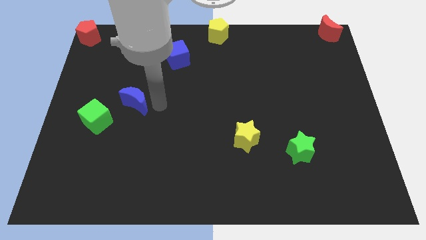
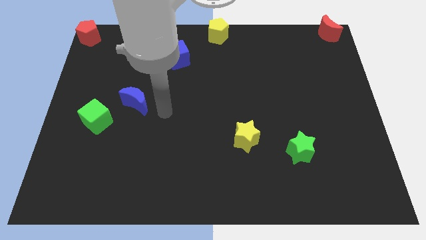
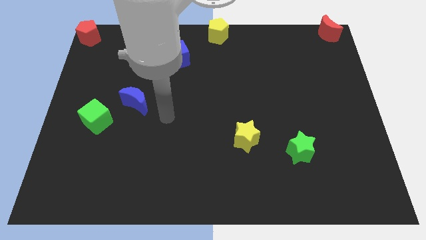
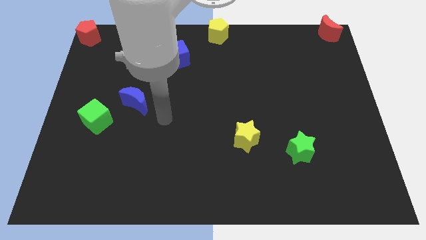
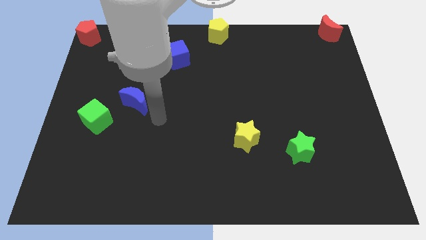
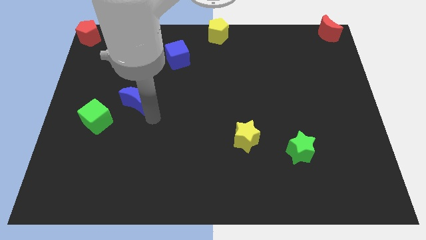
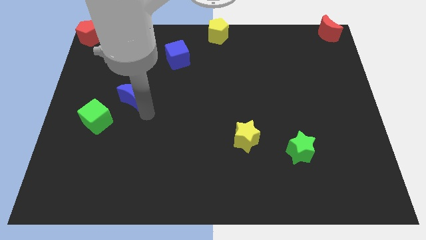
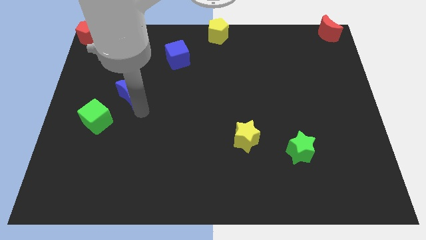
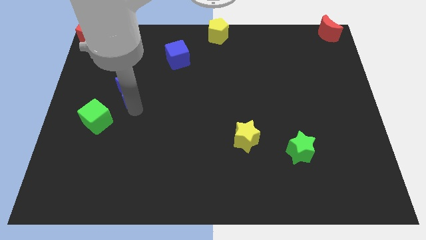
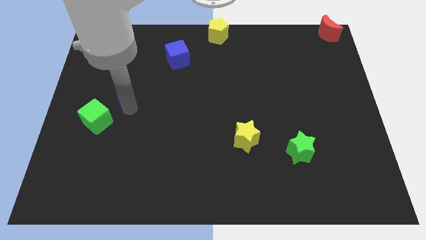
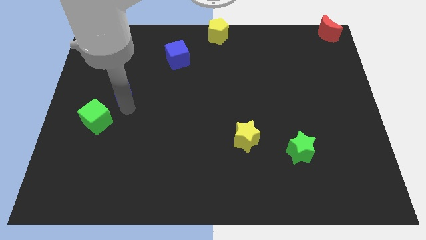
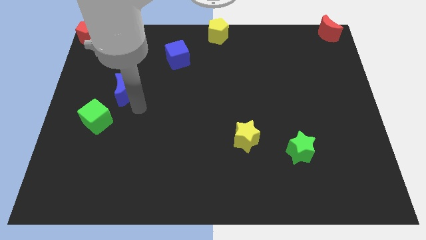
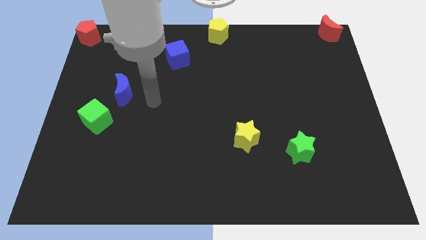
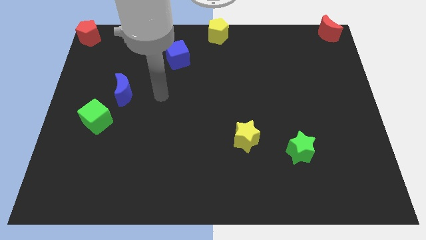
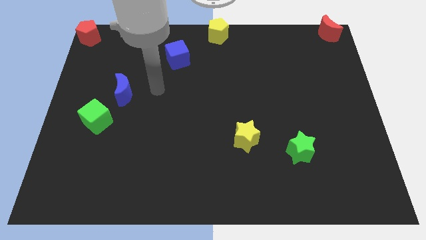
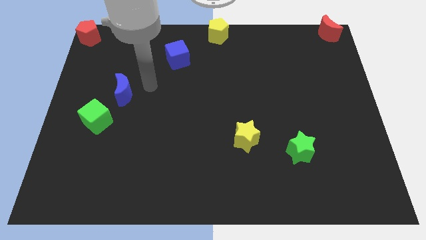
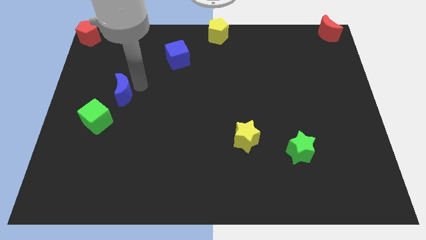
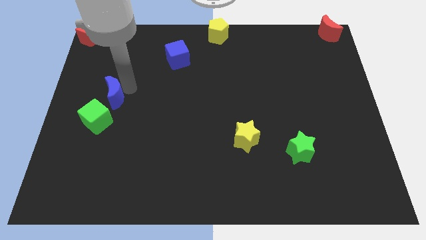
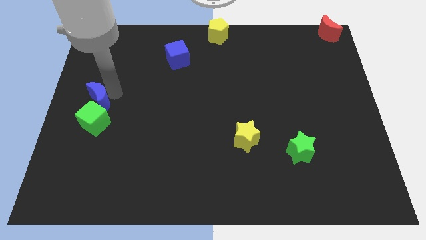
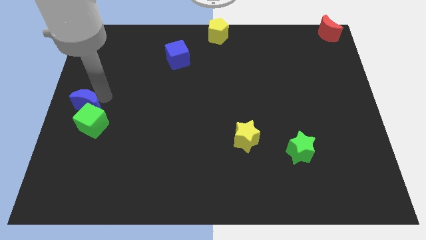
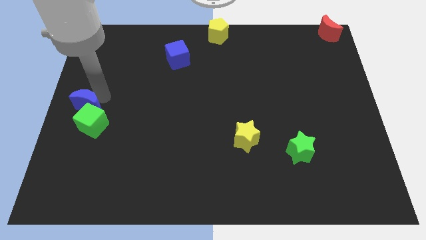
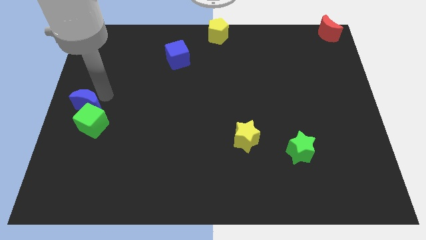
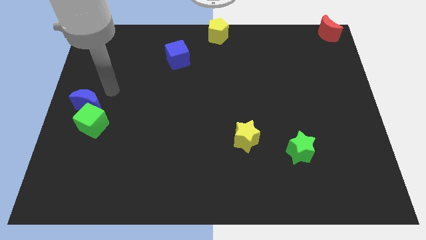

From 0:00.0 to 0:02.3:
move the blue crescent into the green cube at the left bottom of board

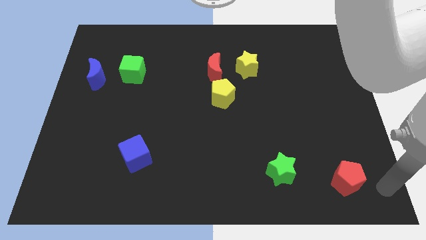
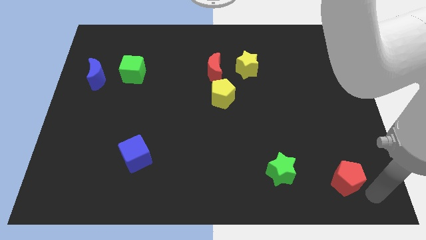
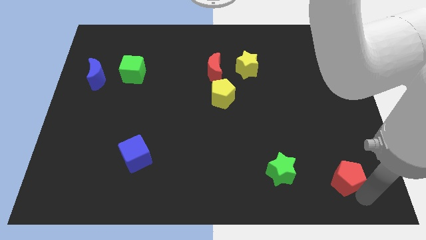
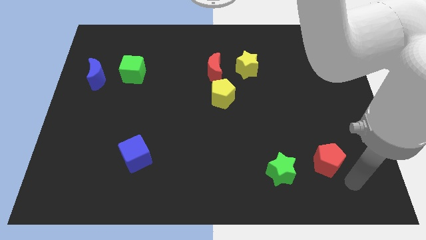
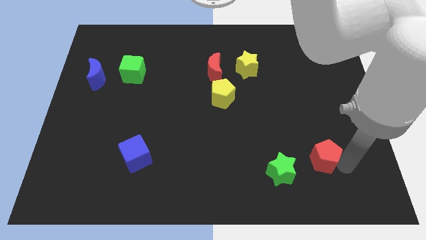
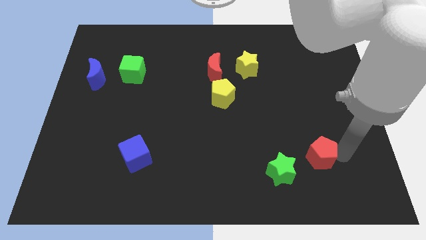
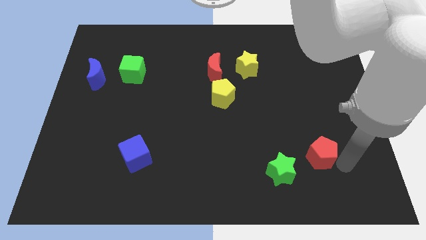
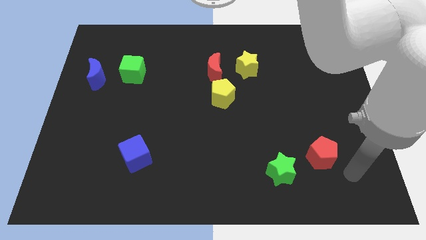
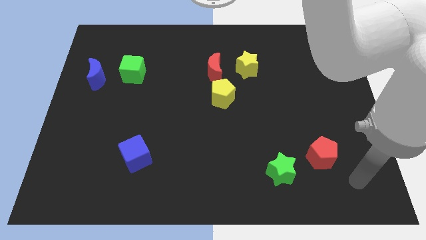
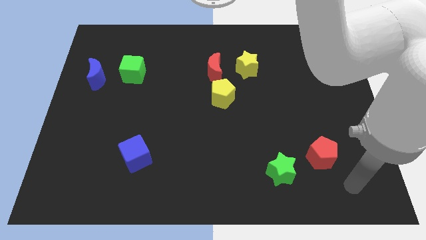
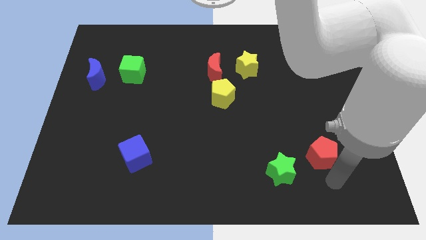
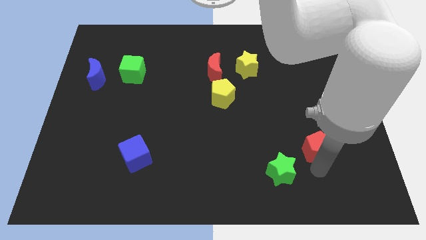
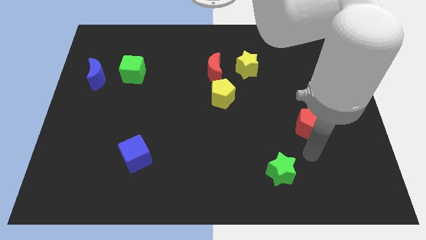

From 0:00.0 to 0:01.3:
push the red pentagon to the top right of the green star

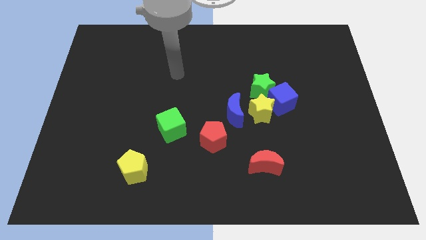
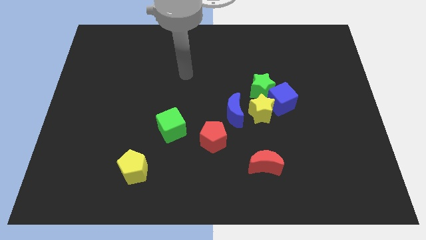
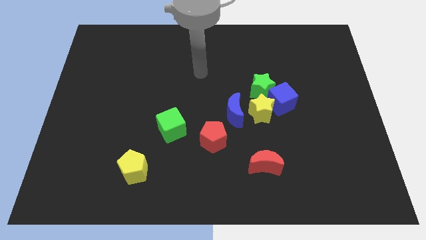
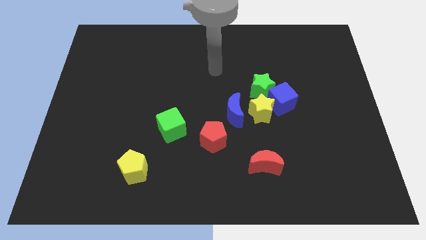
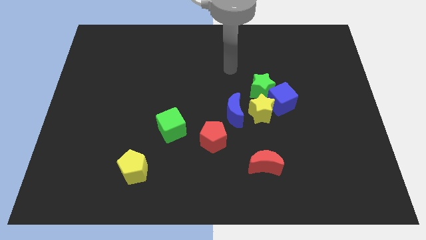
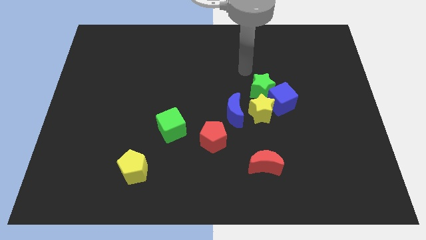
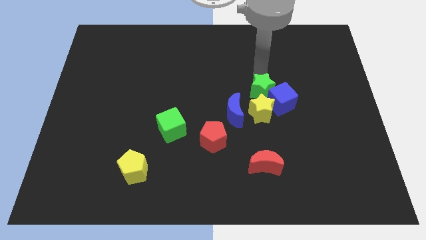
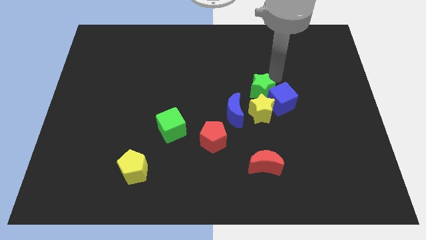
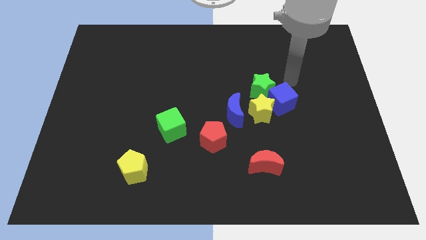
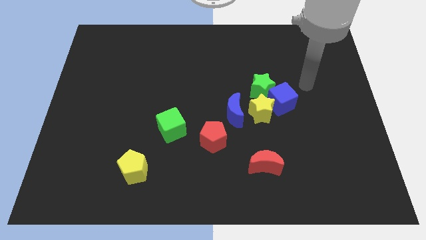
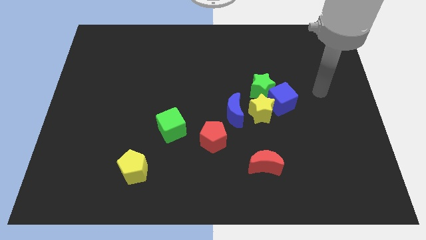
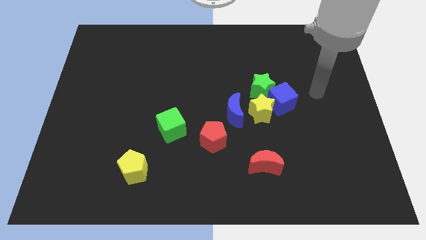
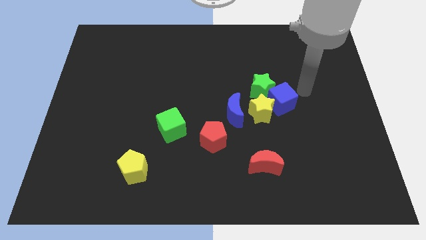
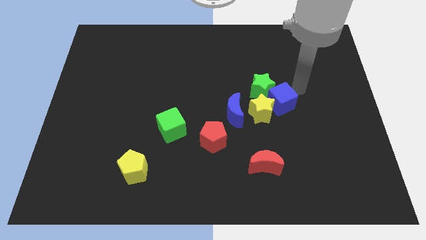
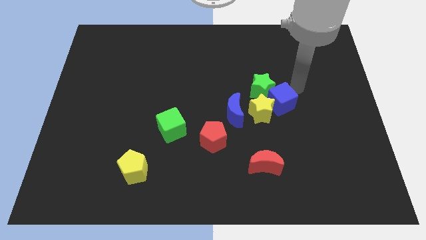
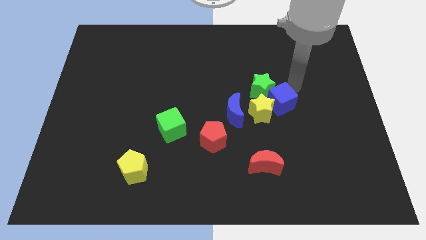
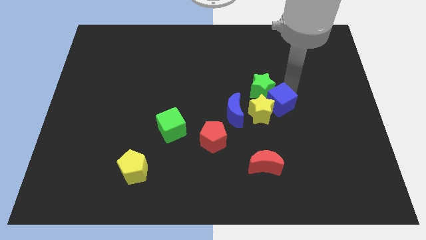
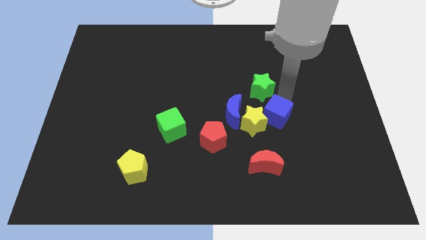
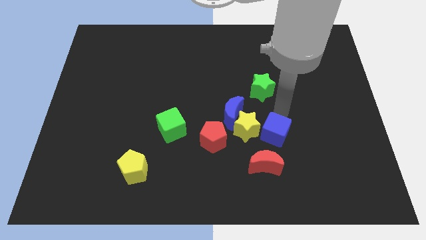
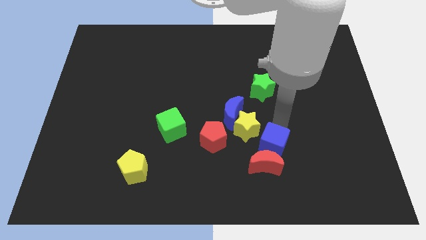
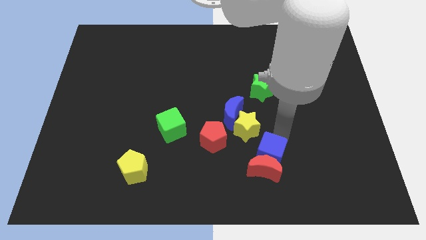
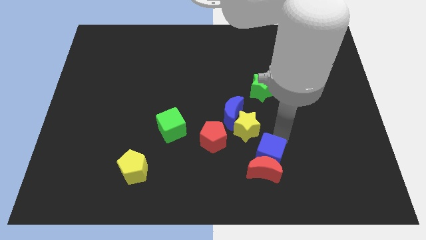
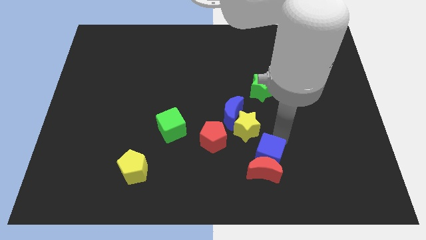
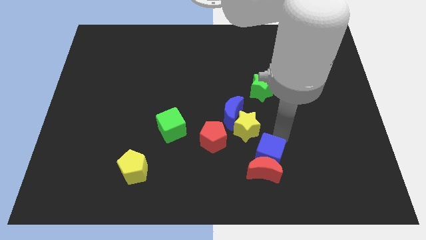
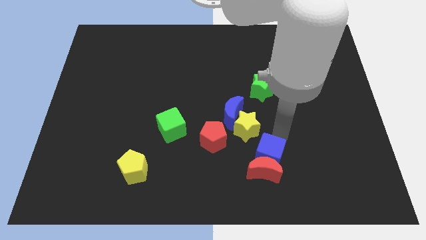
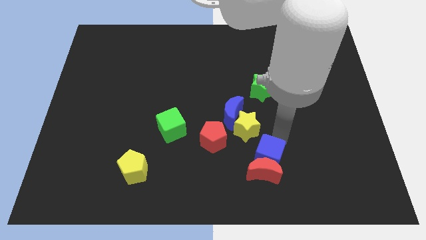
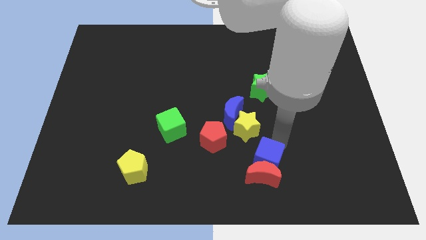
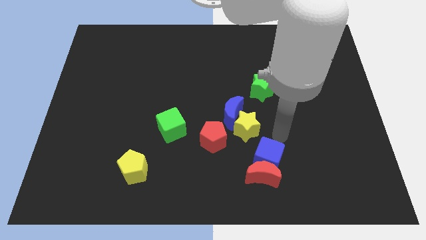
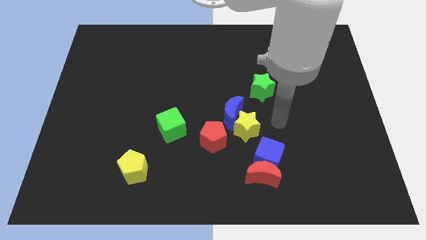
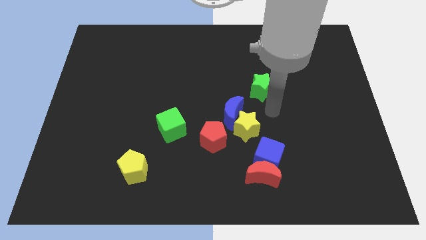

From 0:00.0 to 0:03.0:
push the blue cube into the red moon

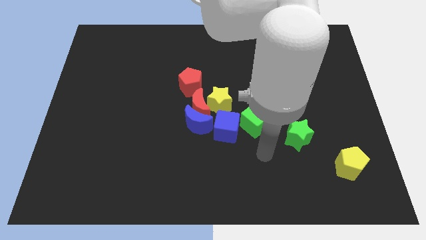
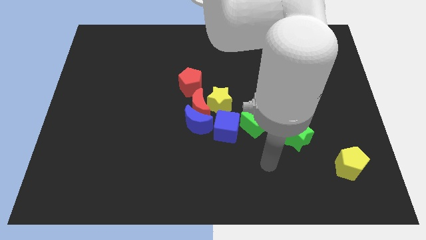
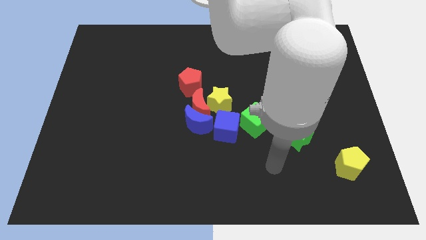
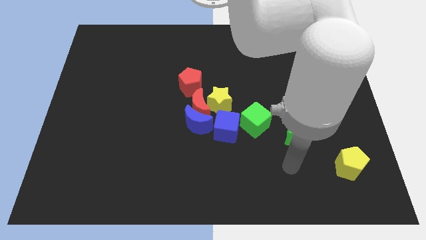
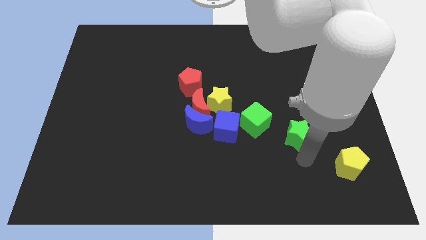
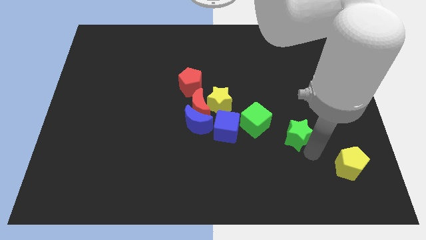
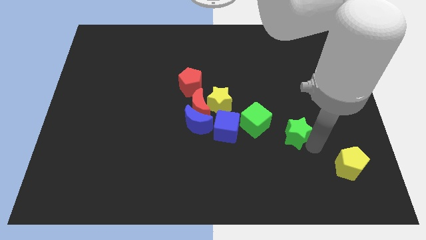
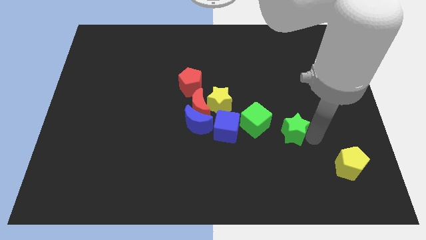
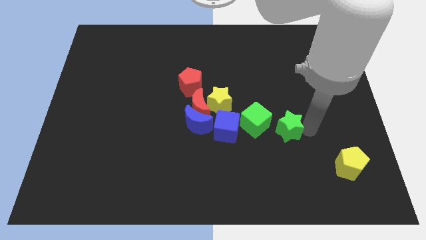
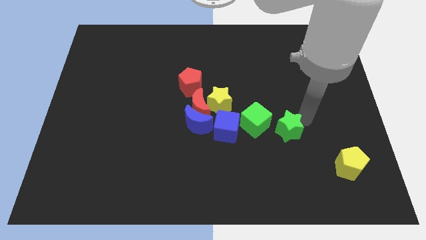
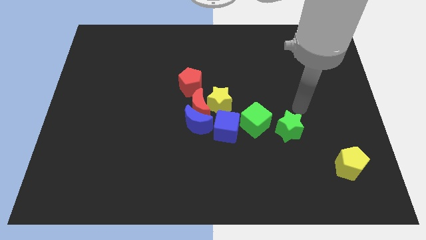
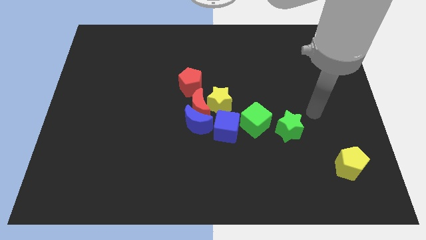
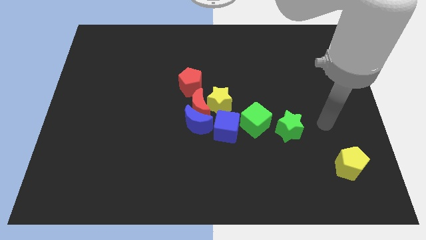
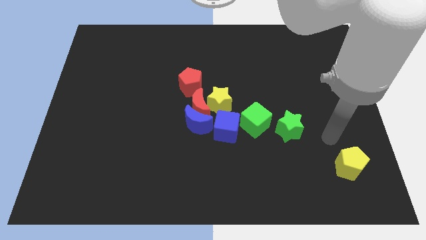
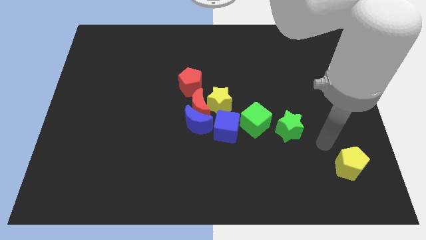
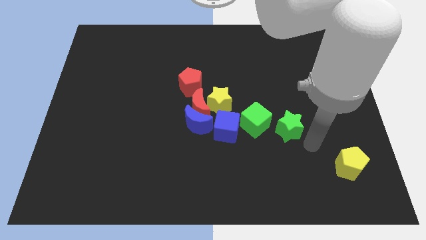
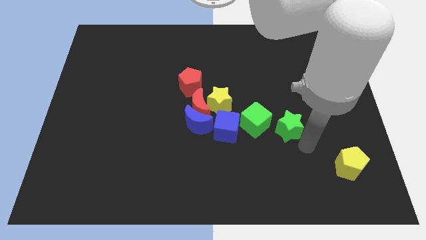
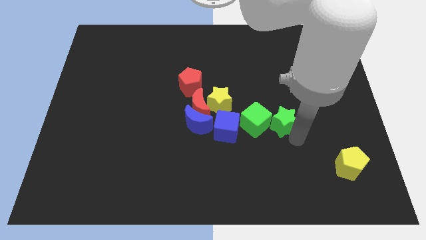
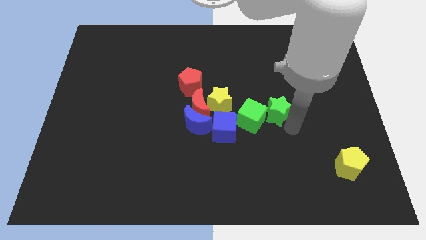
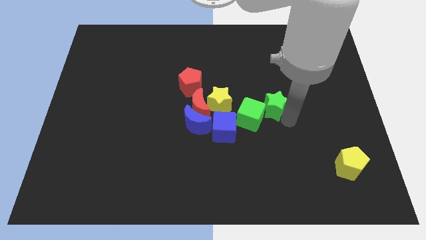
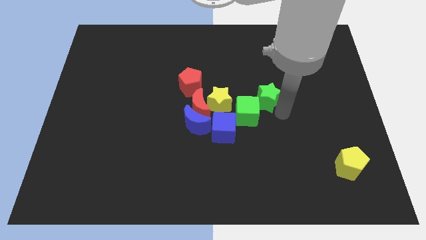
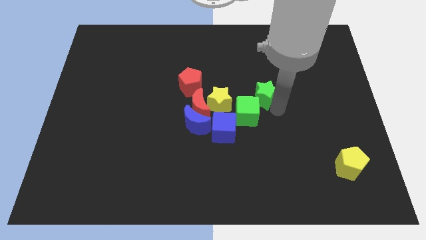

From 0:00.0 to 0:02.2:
move green star into the green cube

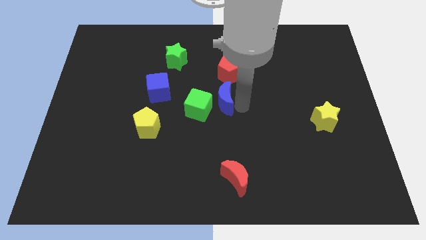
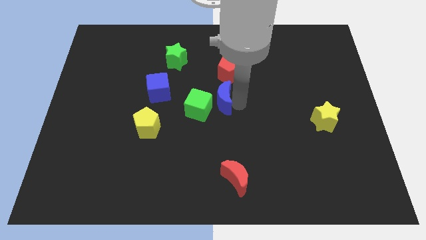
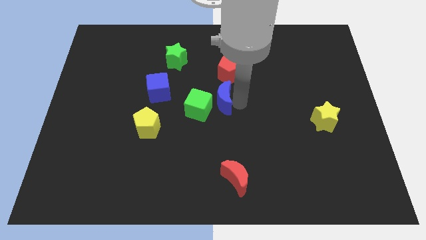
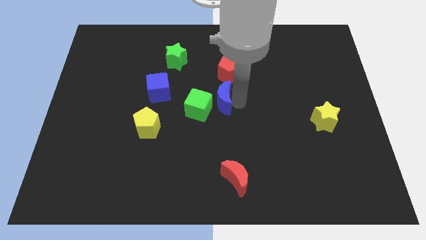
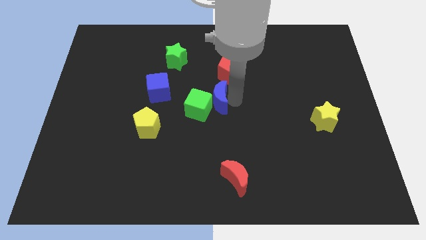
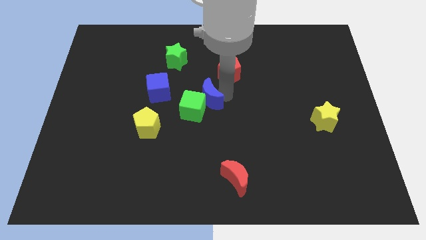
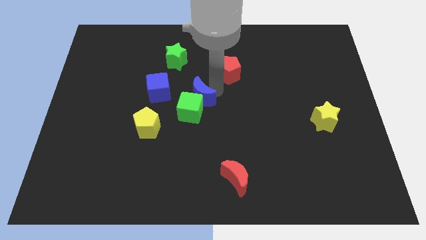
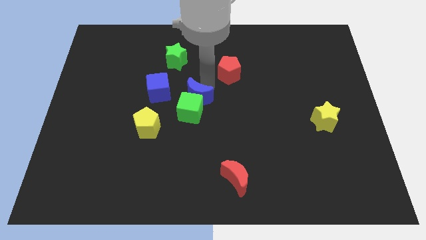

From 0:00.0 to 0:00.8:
place the blue crescent to the top of the green cube
